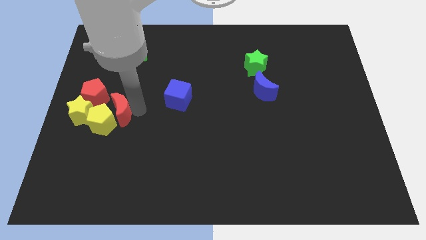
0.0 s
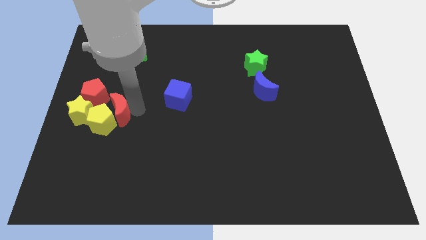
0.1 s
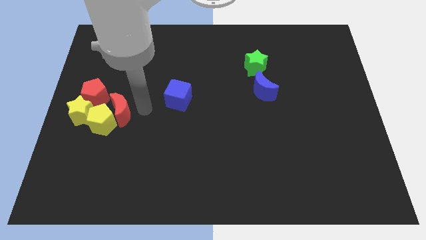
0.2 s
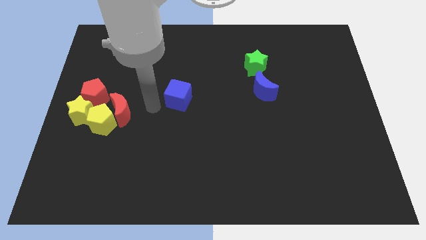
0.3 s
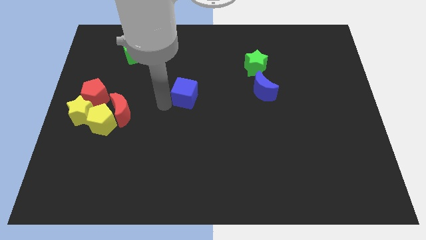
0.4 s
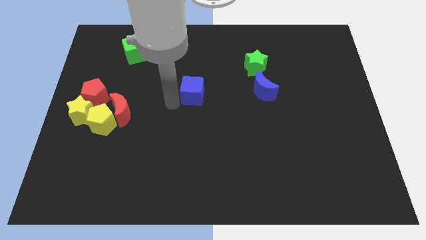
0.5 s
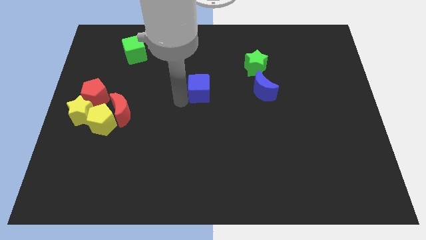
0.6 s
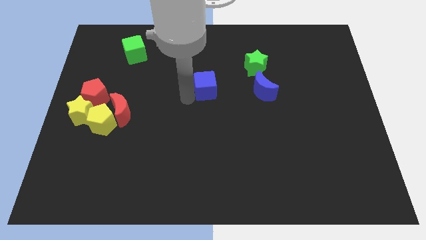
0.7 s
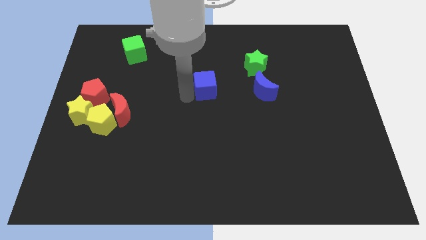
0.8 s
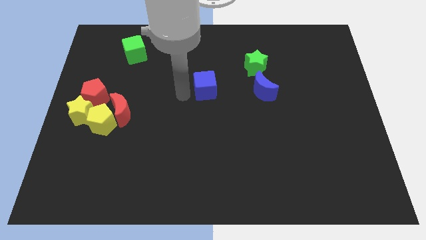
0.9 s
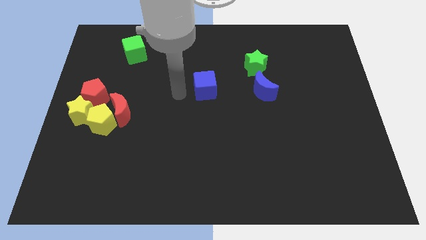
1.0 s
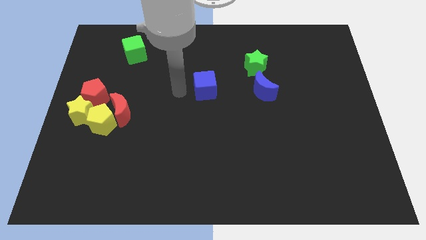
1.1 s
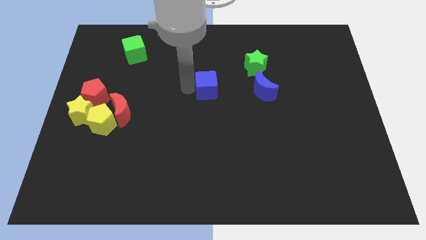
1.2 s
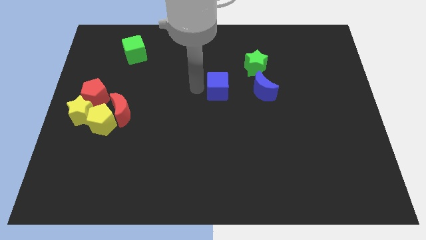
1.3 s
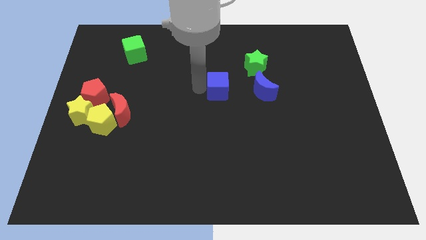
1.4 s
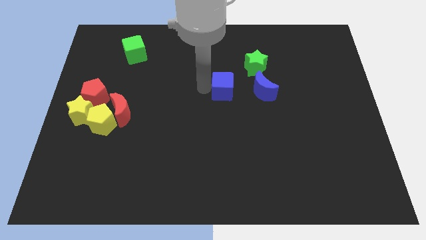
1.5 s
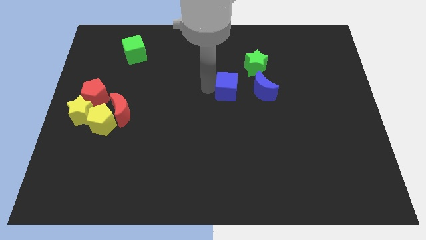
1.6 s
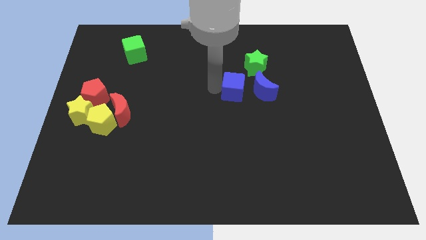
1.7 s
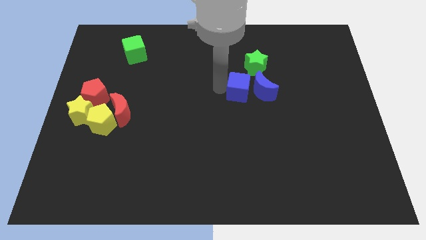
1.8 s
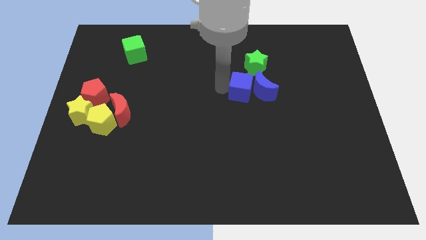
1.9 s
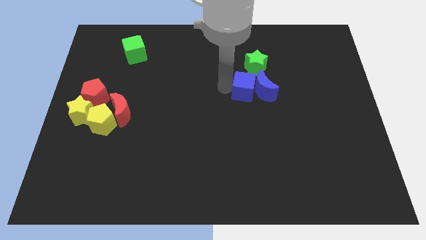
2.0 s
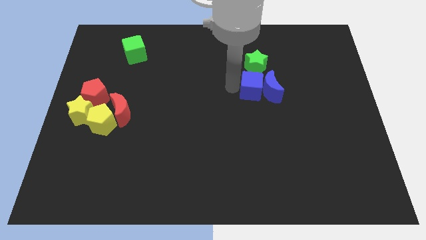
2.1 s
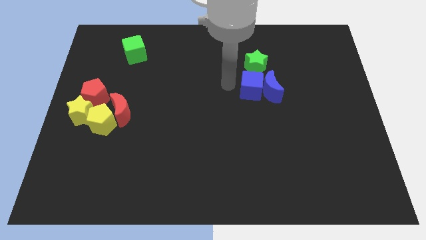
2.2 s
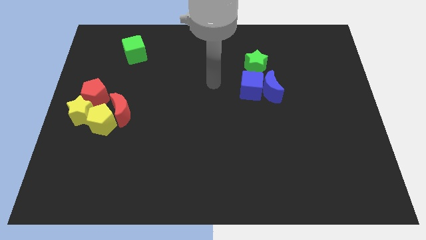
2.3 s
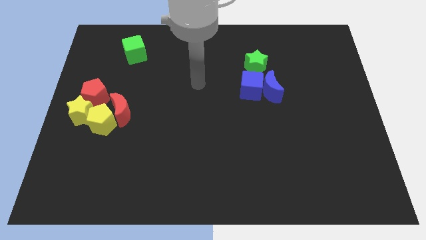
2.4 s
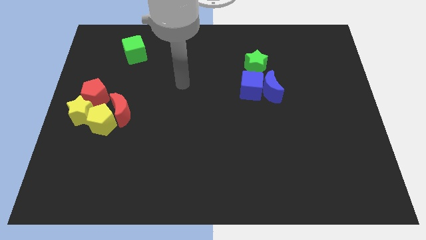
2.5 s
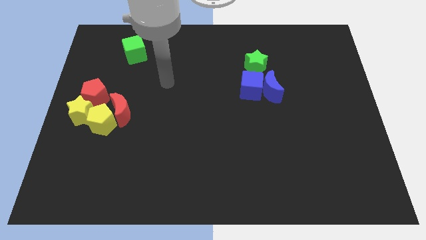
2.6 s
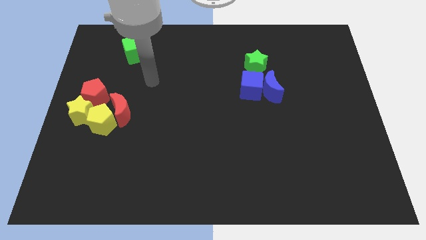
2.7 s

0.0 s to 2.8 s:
push the blue cube towards the blue moon

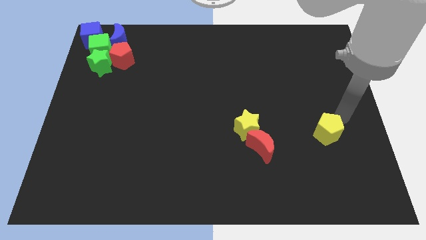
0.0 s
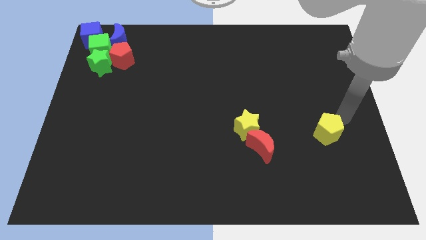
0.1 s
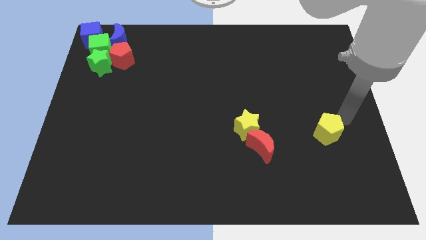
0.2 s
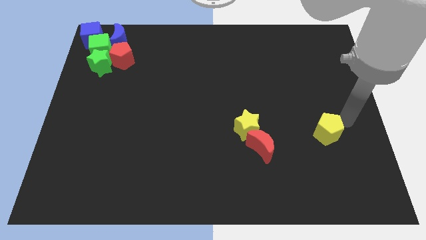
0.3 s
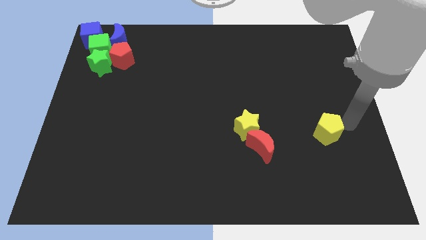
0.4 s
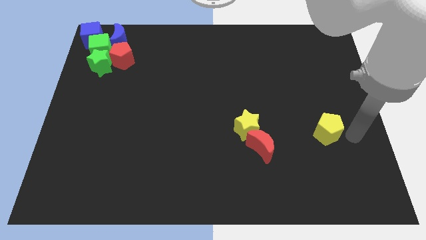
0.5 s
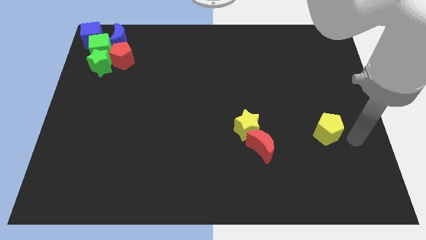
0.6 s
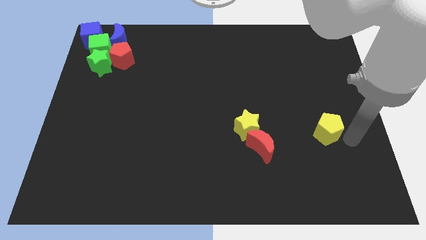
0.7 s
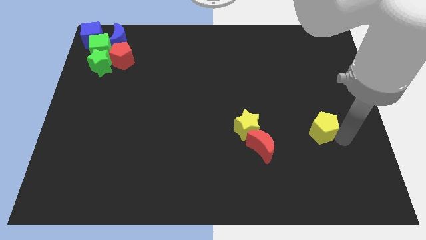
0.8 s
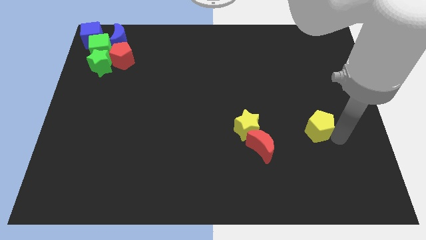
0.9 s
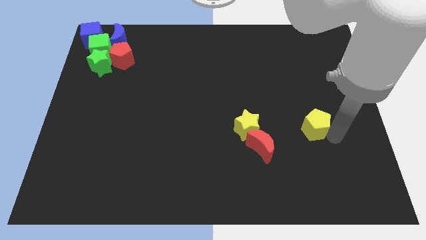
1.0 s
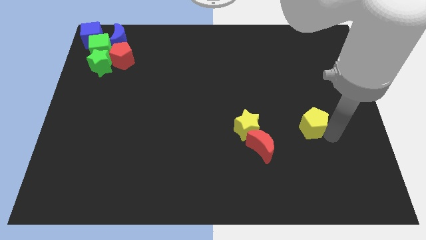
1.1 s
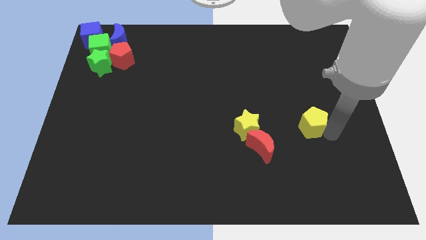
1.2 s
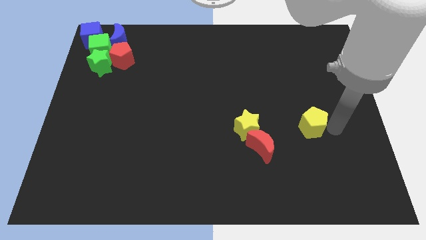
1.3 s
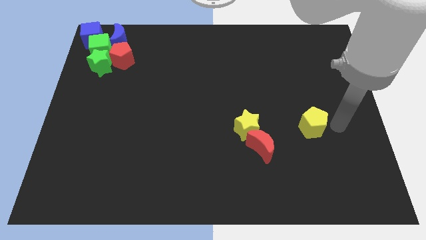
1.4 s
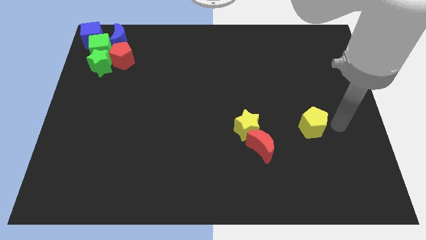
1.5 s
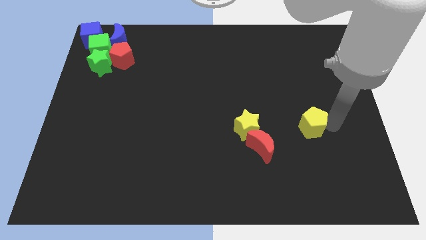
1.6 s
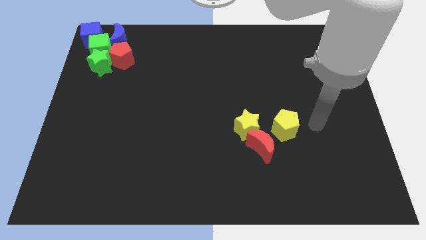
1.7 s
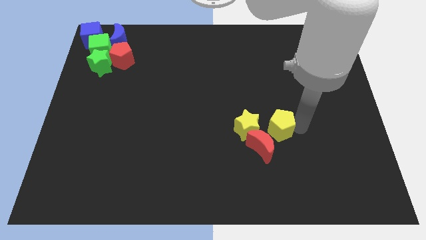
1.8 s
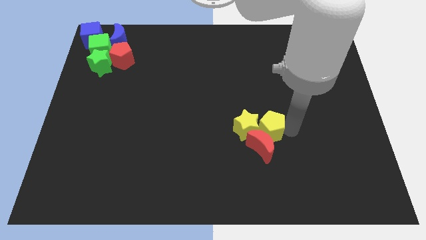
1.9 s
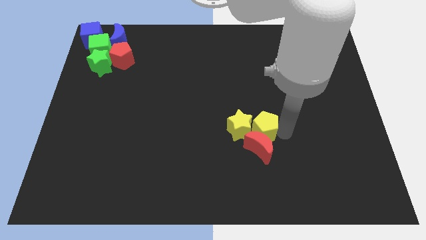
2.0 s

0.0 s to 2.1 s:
move the yellow pentagon to the right of the yellow star

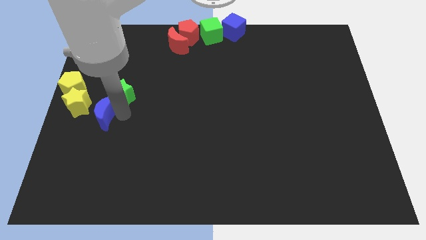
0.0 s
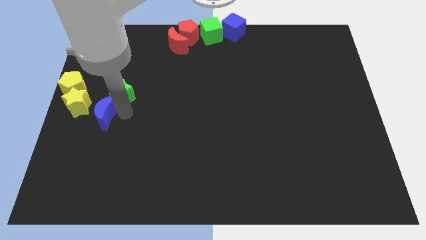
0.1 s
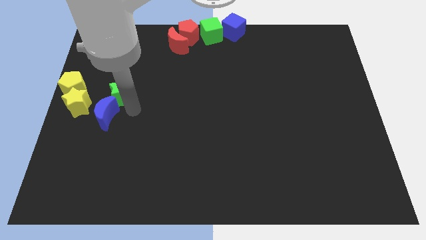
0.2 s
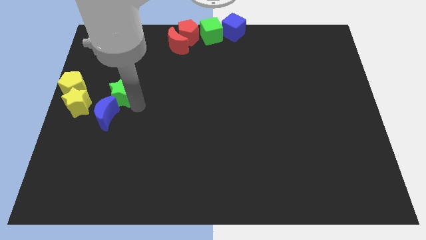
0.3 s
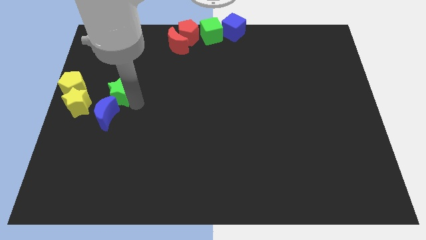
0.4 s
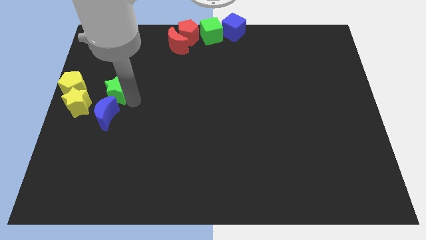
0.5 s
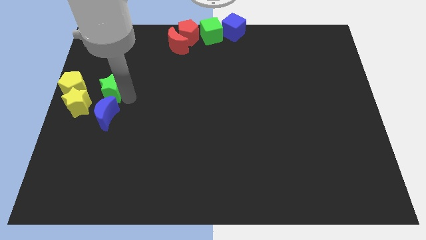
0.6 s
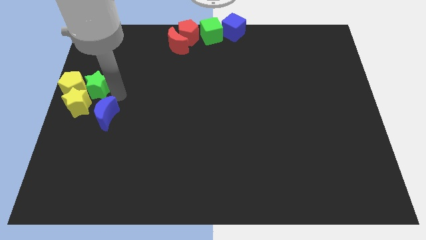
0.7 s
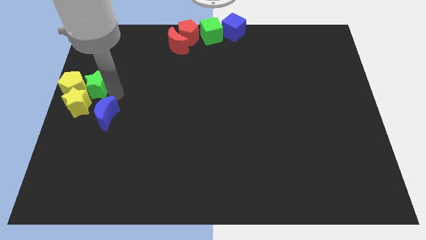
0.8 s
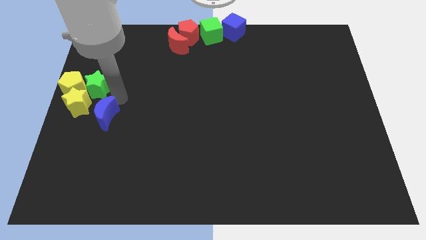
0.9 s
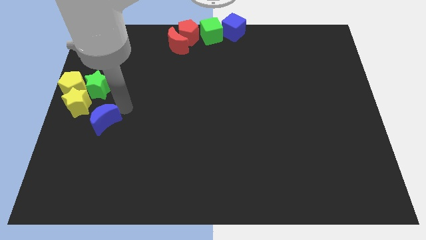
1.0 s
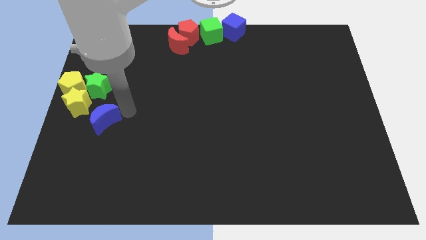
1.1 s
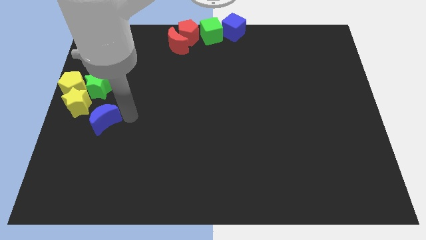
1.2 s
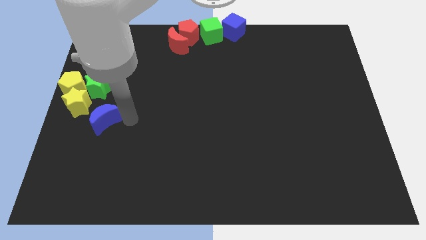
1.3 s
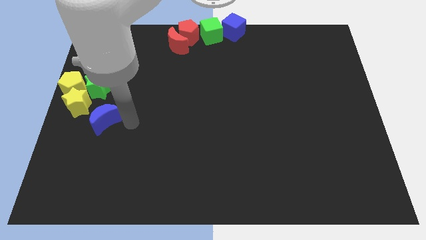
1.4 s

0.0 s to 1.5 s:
place green star to the right side of the yellow pentagon

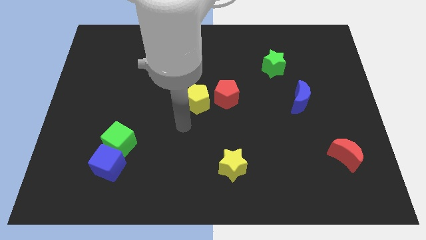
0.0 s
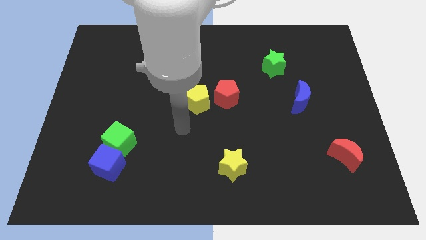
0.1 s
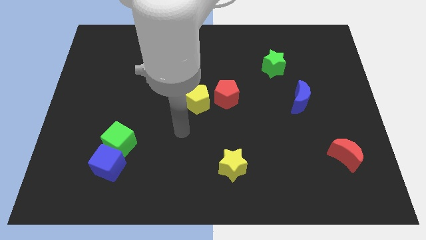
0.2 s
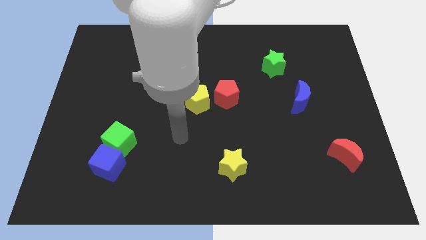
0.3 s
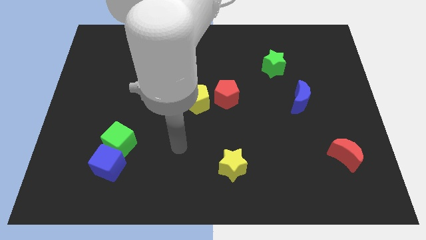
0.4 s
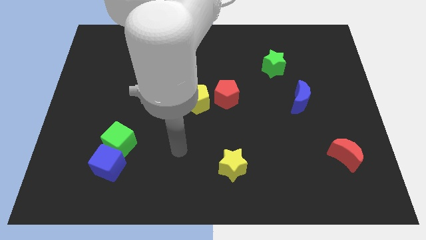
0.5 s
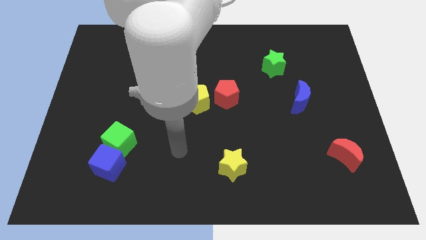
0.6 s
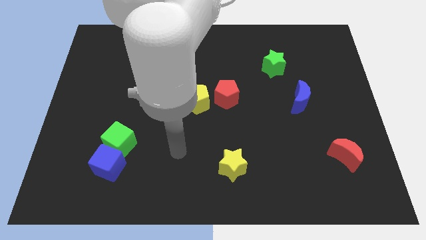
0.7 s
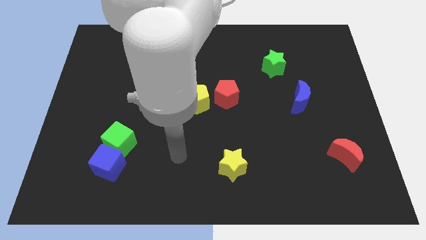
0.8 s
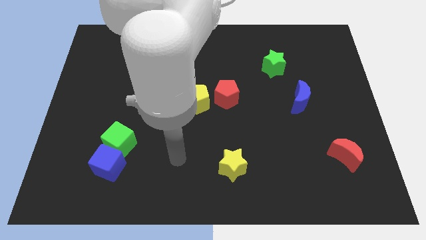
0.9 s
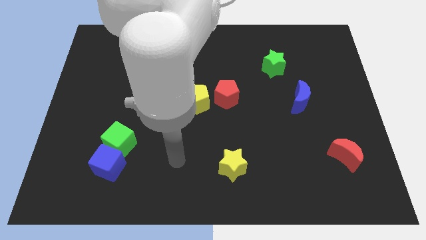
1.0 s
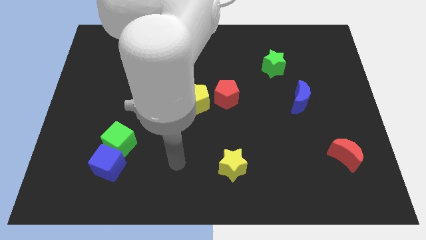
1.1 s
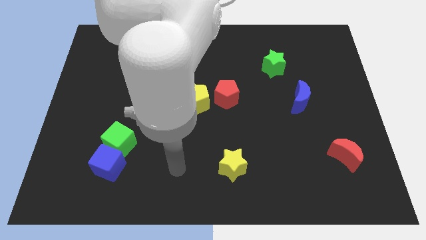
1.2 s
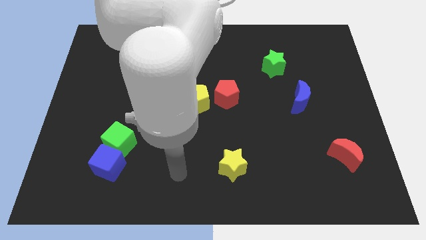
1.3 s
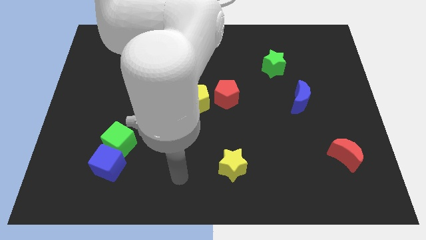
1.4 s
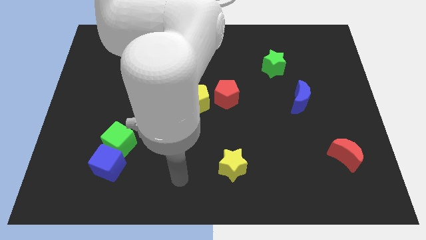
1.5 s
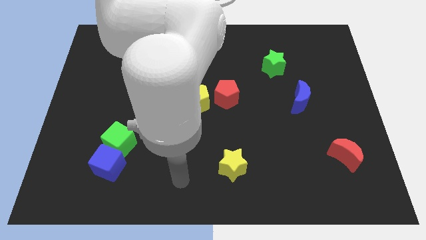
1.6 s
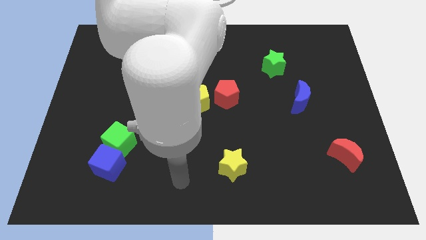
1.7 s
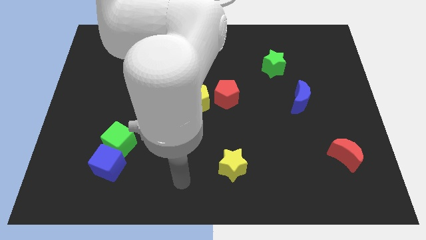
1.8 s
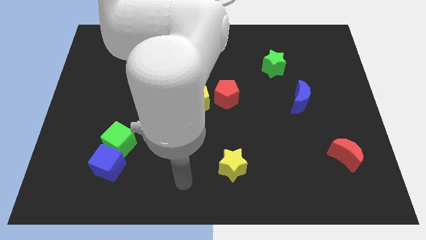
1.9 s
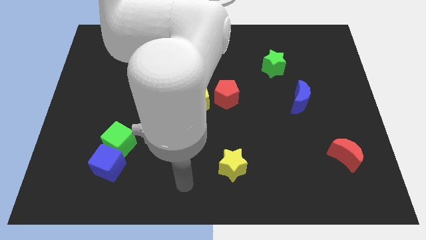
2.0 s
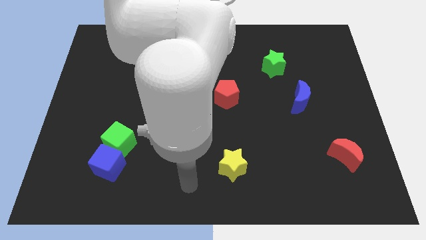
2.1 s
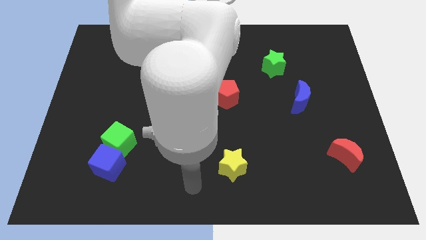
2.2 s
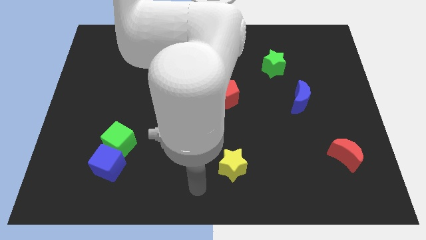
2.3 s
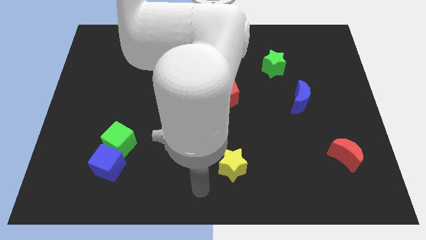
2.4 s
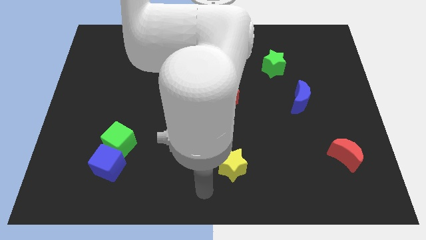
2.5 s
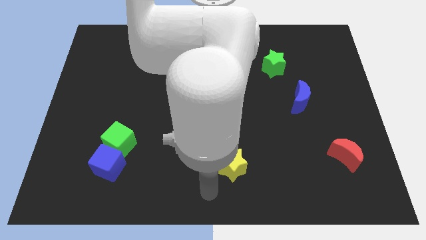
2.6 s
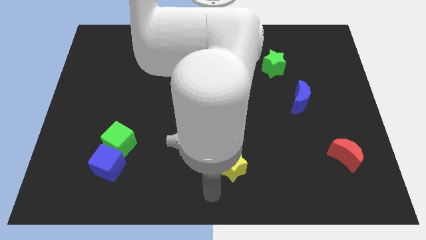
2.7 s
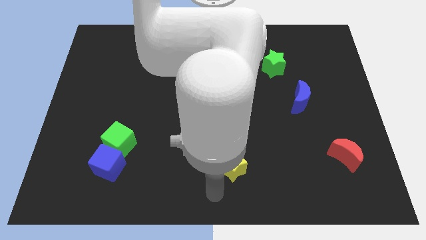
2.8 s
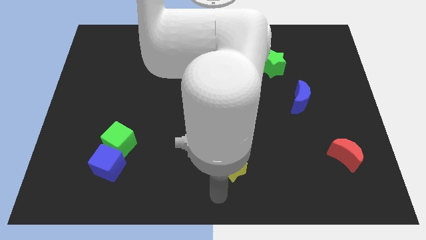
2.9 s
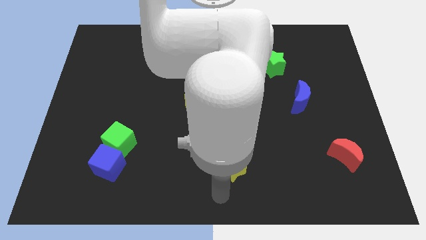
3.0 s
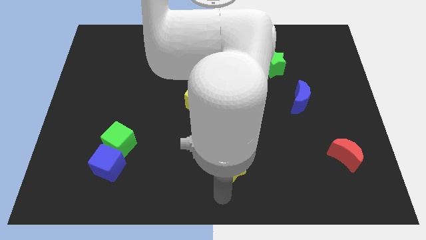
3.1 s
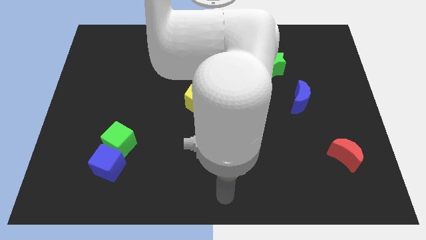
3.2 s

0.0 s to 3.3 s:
point your arm at the bottom of the yellow star
